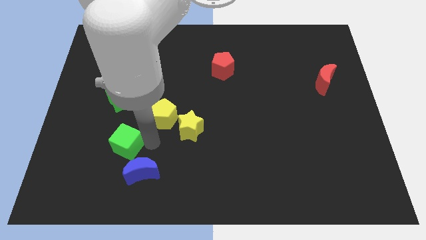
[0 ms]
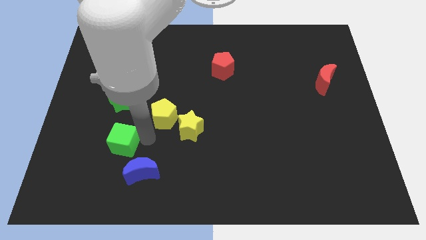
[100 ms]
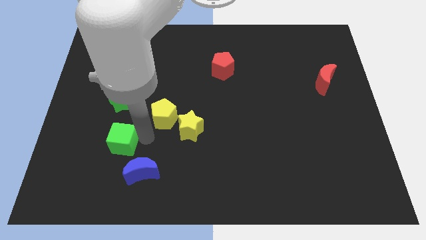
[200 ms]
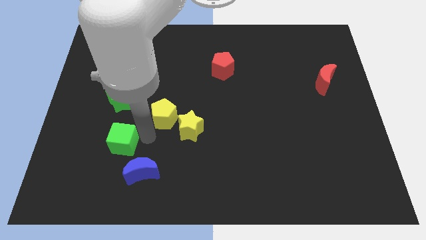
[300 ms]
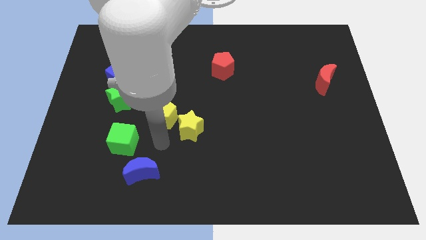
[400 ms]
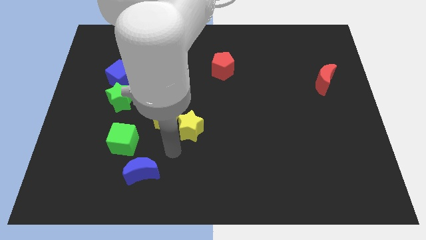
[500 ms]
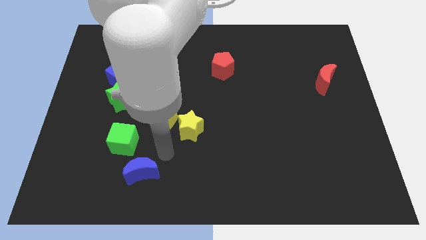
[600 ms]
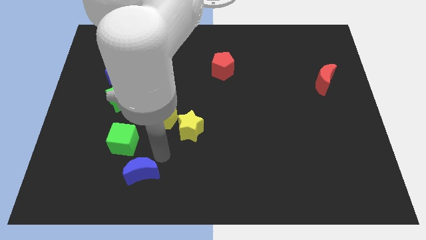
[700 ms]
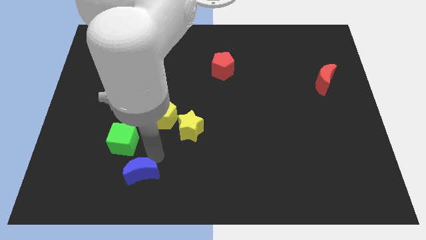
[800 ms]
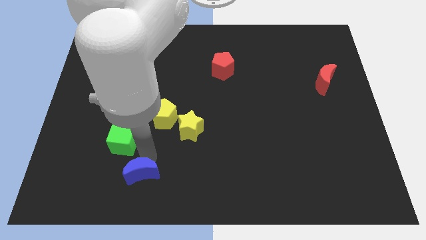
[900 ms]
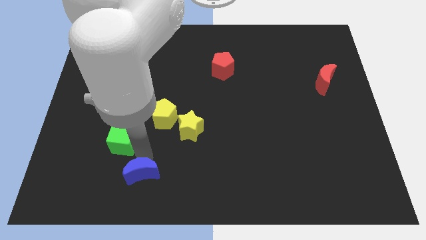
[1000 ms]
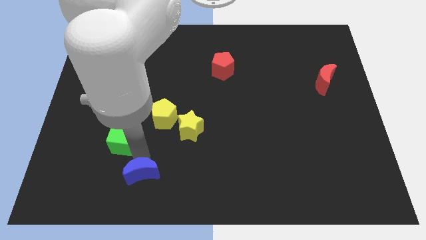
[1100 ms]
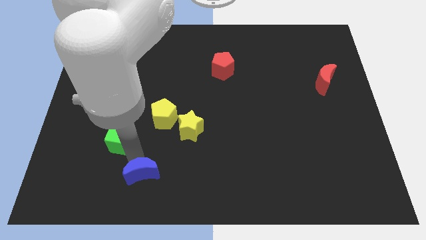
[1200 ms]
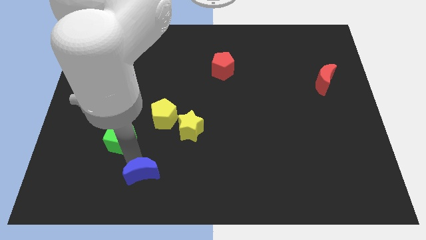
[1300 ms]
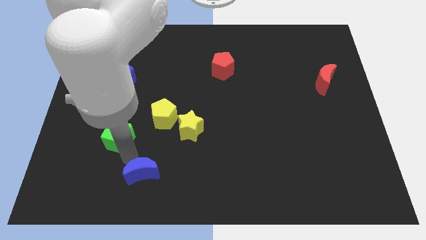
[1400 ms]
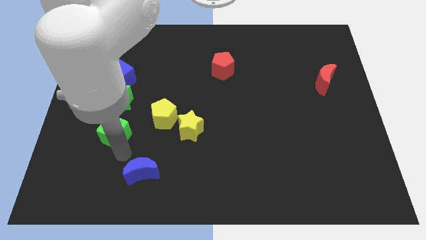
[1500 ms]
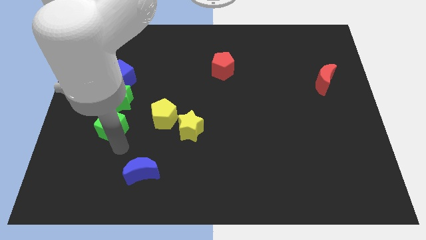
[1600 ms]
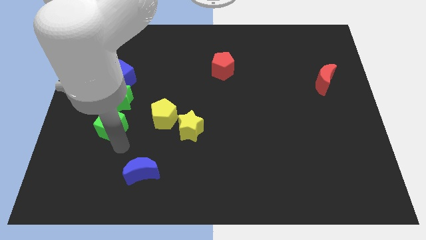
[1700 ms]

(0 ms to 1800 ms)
push the green cube slightly towards the green star

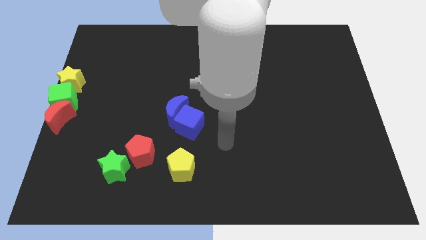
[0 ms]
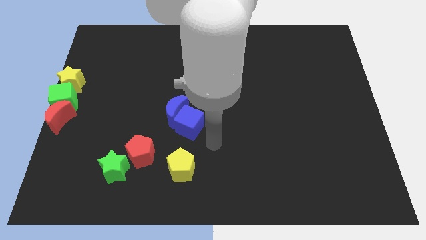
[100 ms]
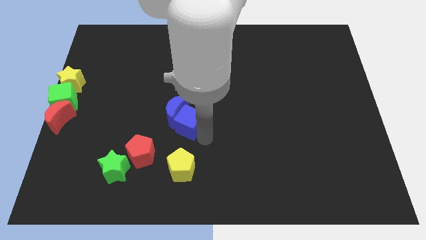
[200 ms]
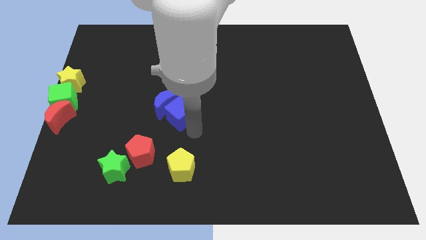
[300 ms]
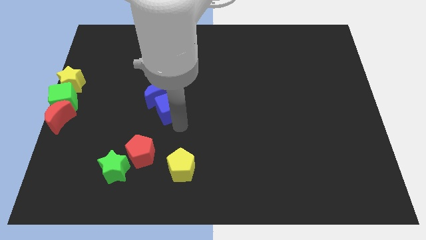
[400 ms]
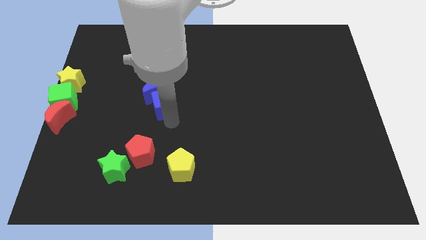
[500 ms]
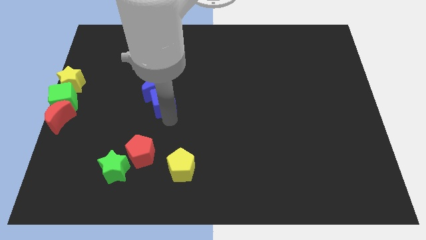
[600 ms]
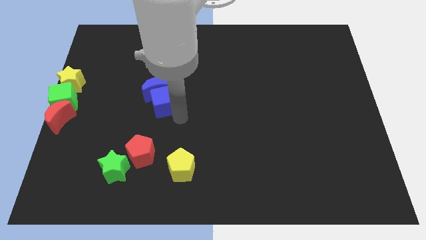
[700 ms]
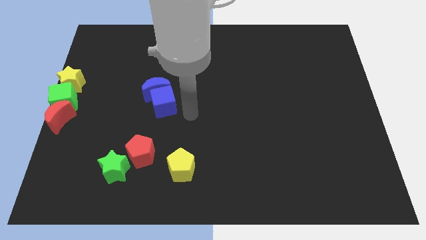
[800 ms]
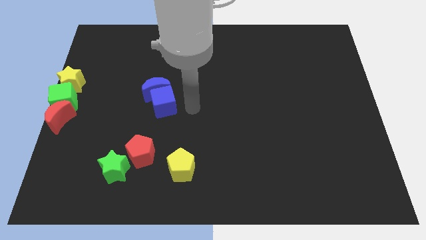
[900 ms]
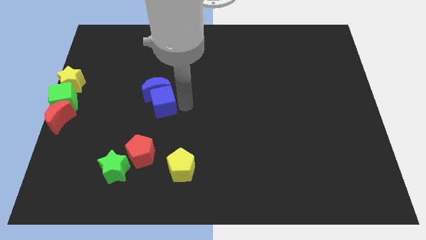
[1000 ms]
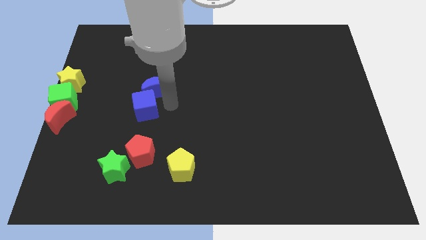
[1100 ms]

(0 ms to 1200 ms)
put the blue blocks diagonally top left to the yellow pentagon

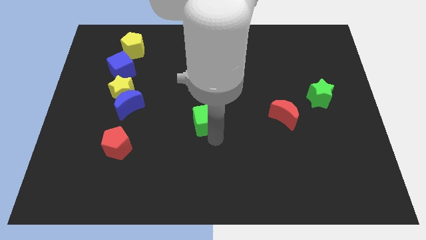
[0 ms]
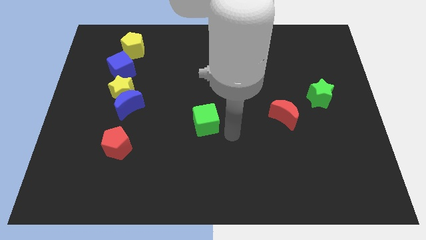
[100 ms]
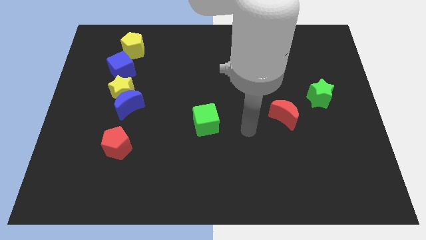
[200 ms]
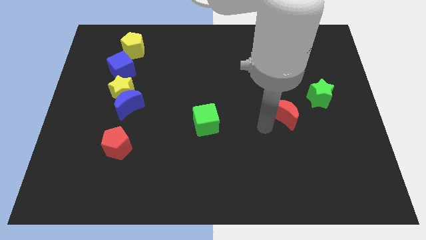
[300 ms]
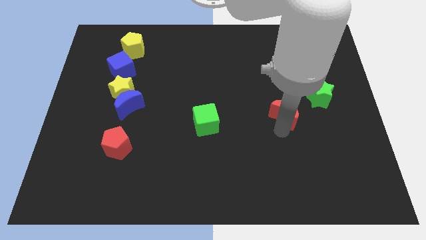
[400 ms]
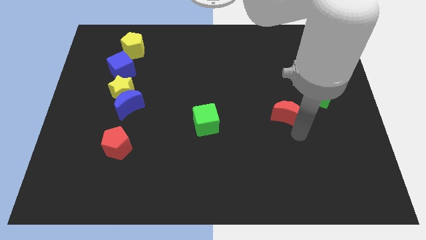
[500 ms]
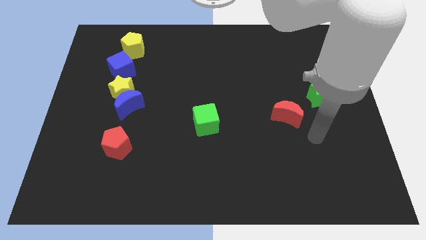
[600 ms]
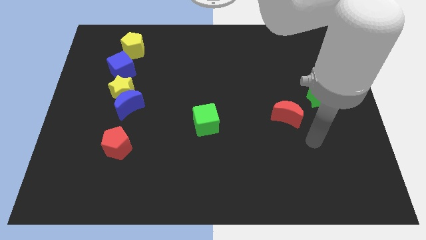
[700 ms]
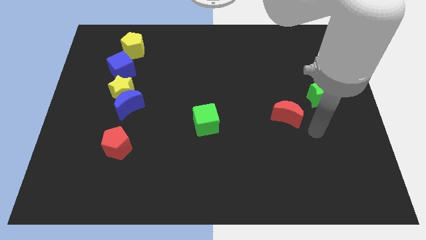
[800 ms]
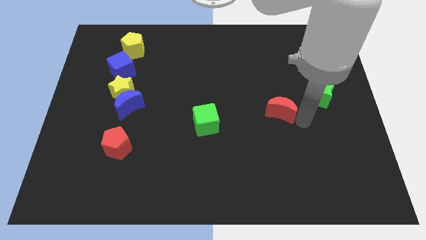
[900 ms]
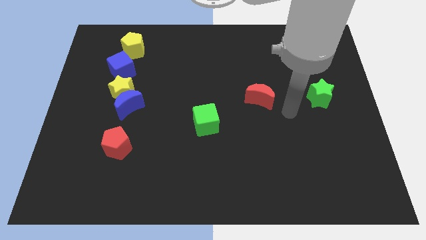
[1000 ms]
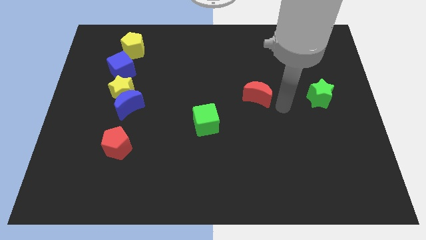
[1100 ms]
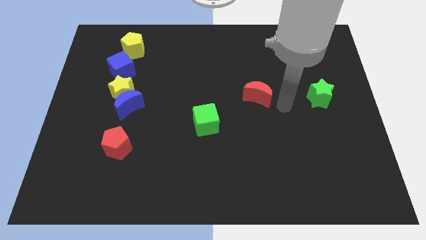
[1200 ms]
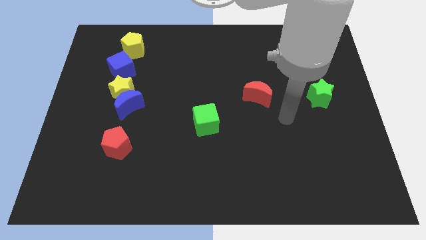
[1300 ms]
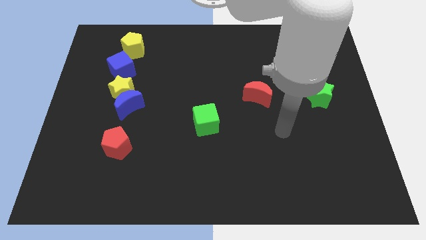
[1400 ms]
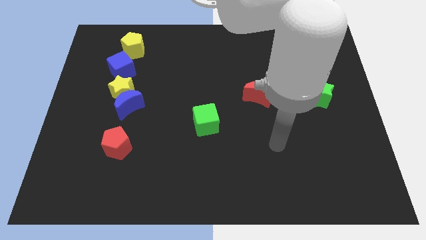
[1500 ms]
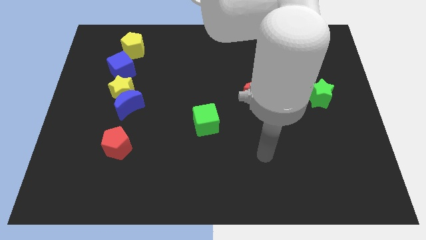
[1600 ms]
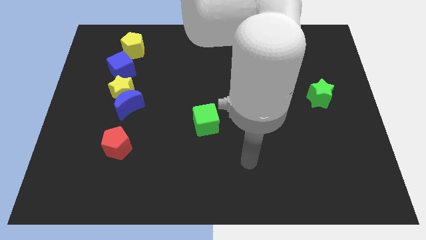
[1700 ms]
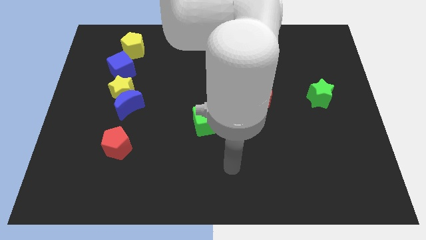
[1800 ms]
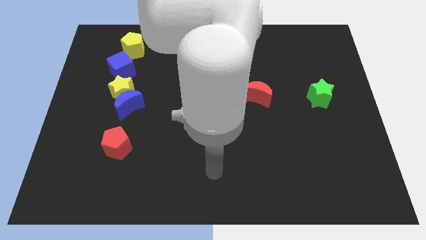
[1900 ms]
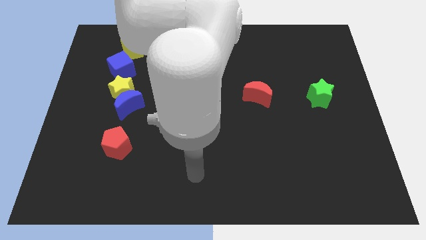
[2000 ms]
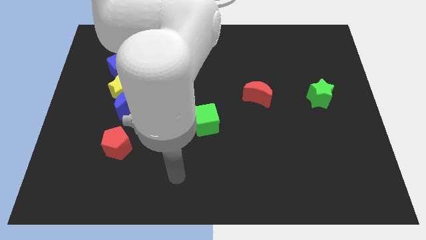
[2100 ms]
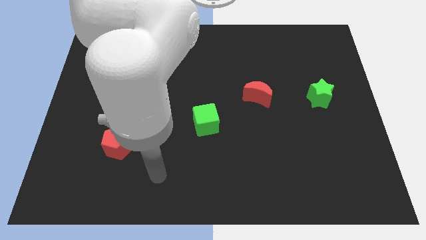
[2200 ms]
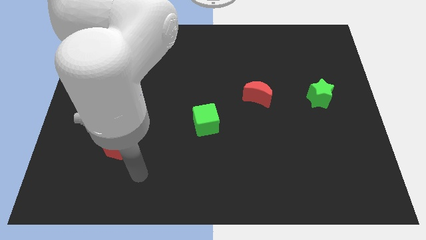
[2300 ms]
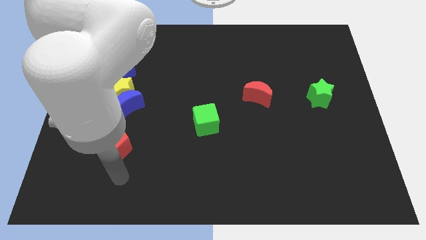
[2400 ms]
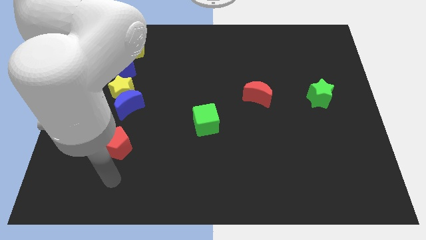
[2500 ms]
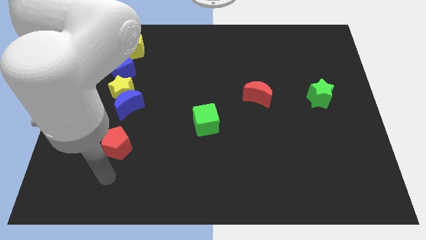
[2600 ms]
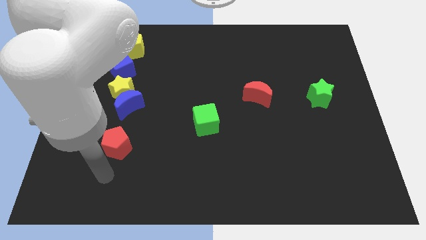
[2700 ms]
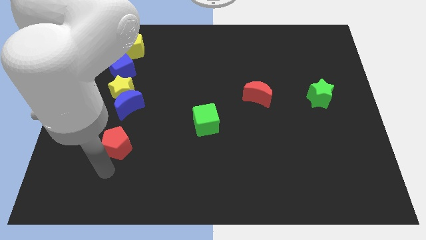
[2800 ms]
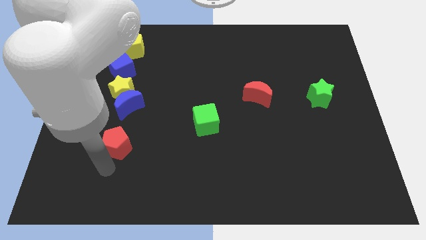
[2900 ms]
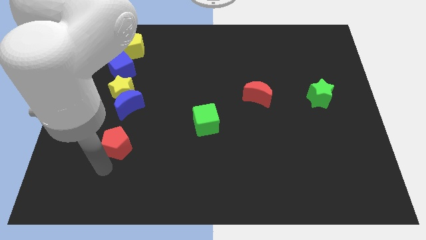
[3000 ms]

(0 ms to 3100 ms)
move the red crescent parallel to the left of the green star

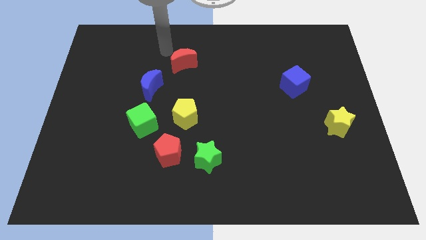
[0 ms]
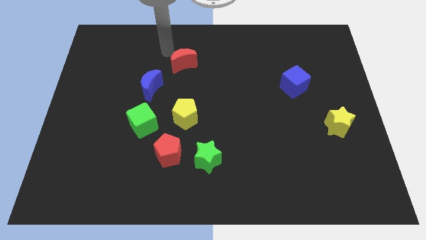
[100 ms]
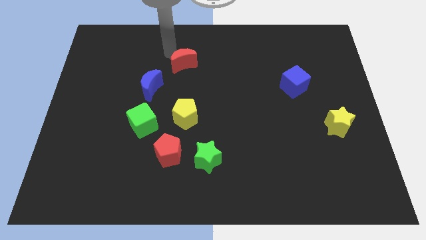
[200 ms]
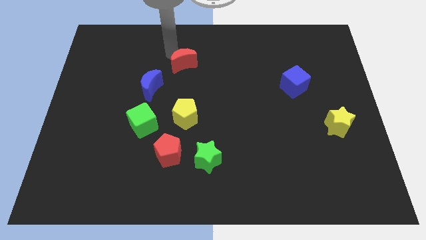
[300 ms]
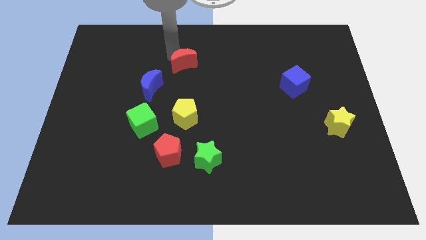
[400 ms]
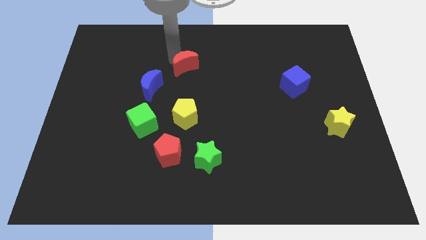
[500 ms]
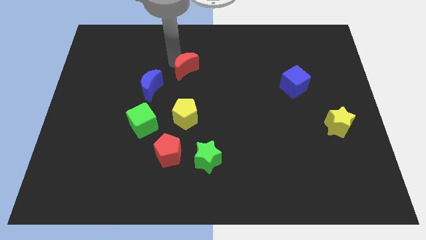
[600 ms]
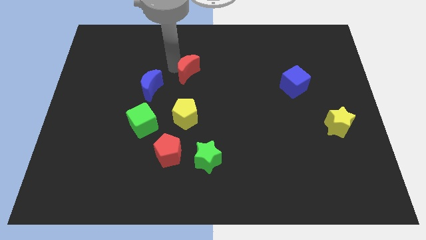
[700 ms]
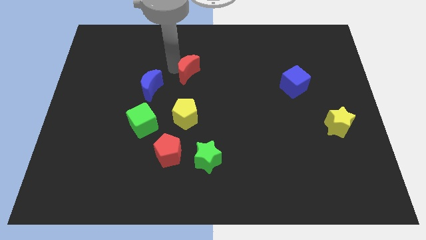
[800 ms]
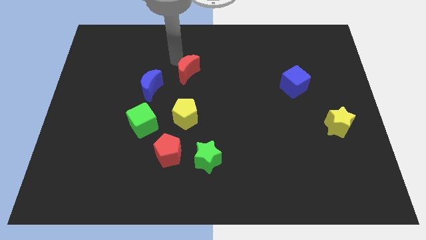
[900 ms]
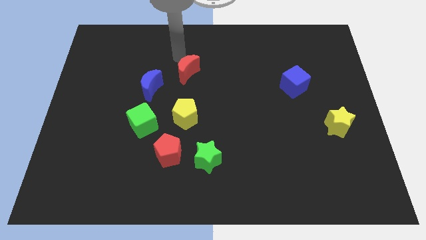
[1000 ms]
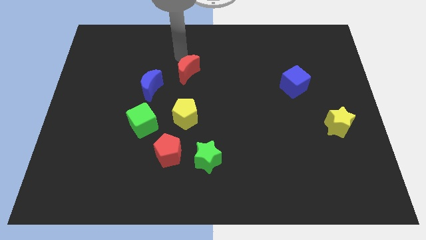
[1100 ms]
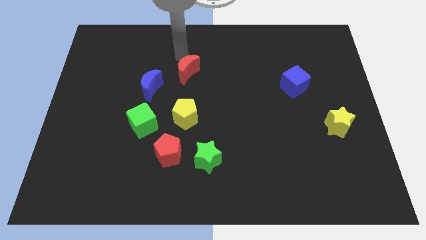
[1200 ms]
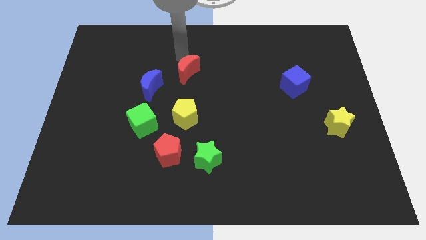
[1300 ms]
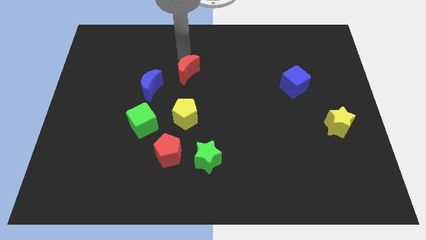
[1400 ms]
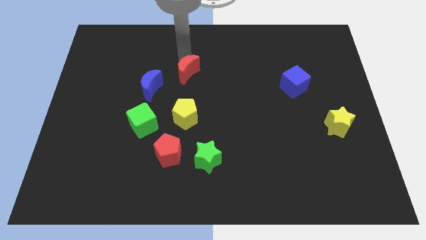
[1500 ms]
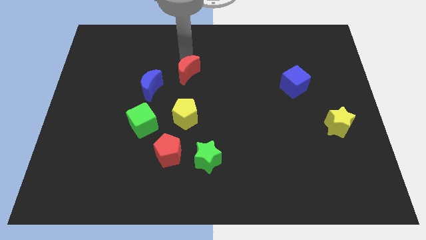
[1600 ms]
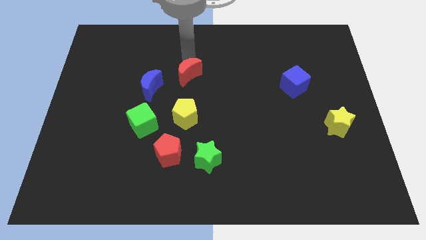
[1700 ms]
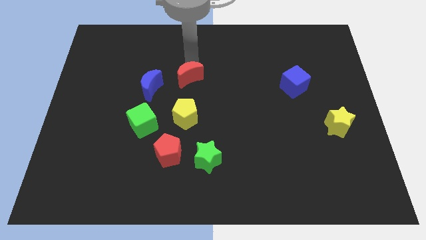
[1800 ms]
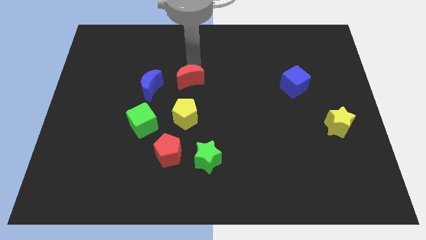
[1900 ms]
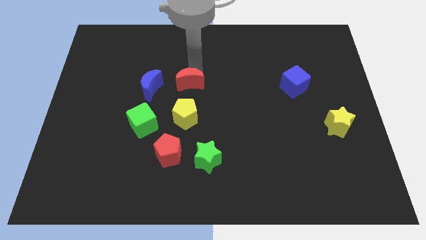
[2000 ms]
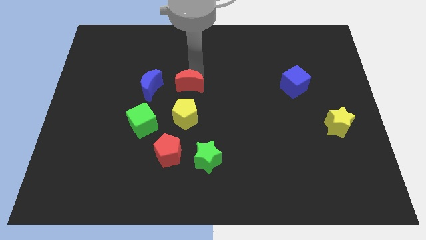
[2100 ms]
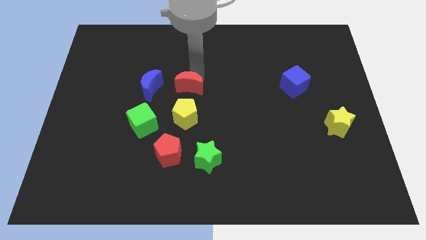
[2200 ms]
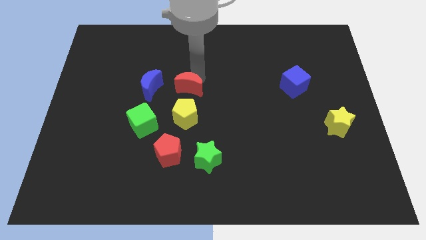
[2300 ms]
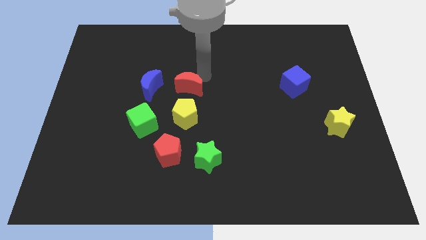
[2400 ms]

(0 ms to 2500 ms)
push the red moon above the yellow pentagon

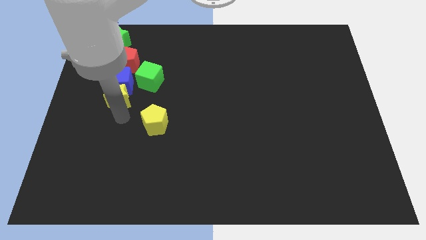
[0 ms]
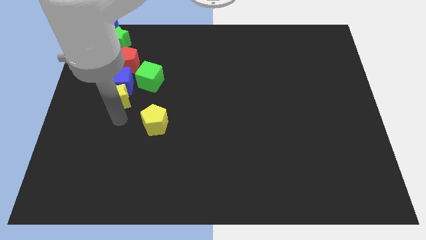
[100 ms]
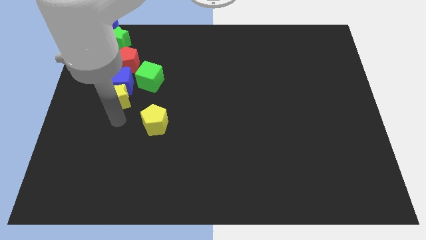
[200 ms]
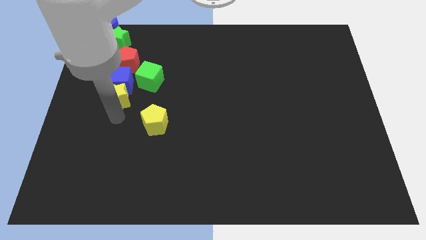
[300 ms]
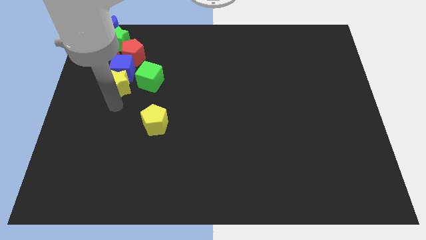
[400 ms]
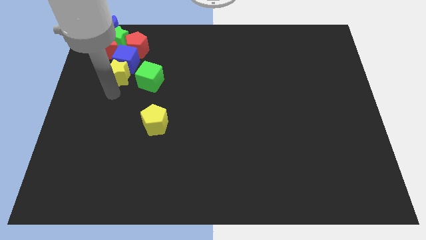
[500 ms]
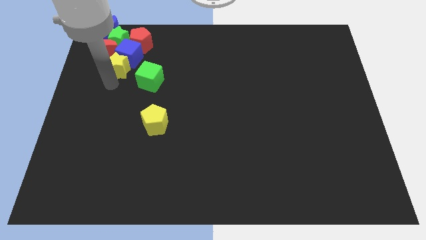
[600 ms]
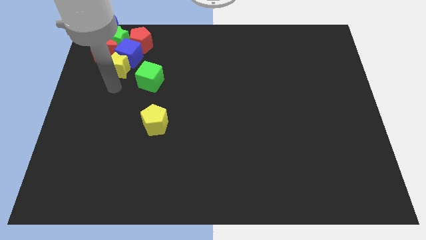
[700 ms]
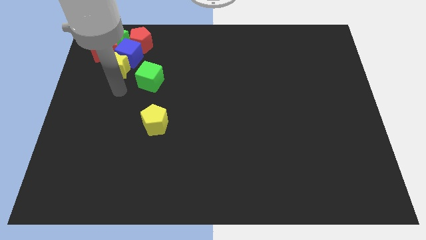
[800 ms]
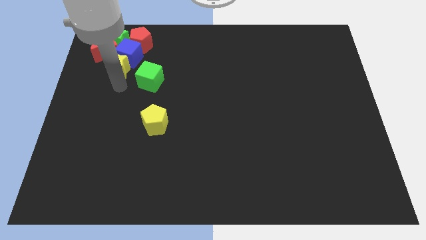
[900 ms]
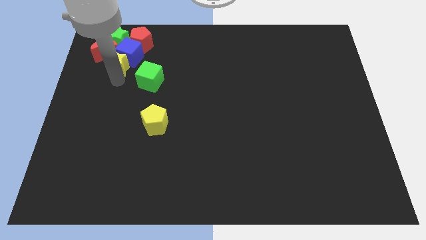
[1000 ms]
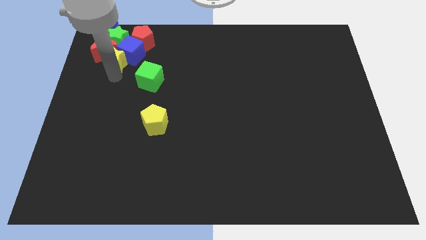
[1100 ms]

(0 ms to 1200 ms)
move the yellow star and the blue cube towards the group of blocks
